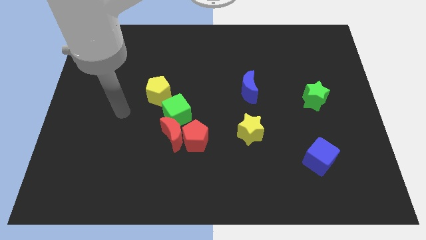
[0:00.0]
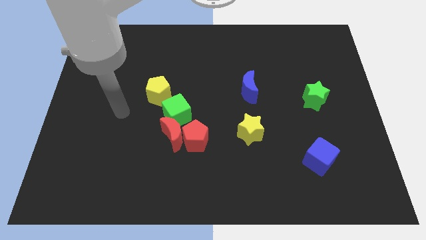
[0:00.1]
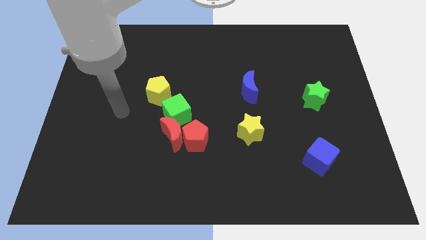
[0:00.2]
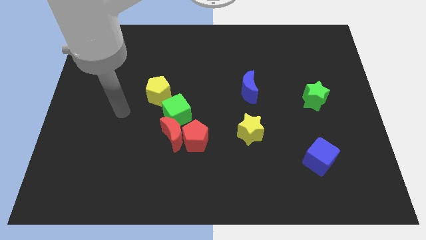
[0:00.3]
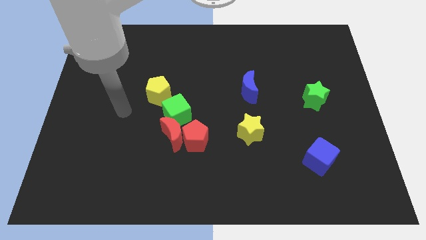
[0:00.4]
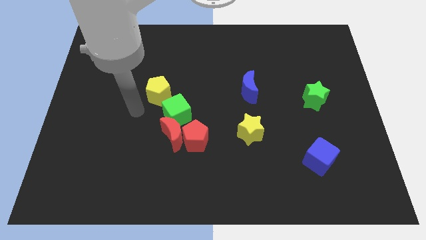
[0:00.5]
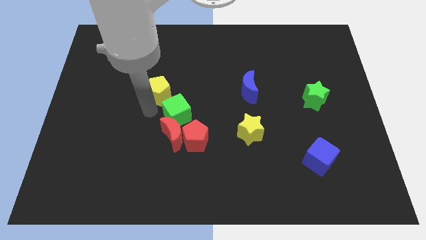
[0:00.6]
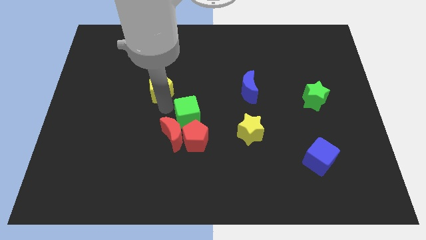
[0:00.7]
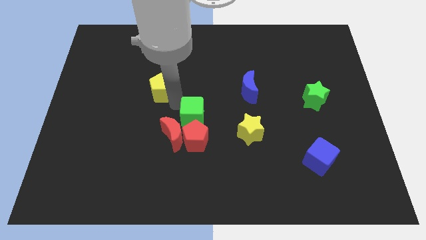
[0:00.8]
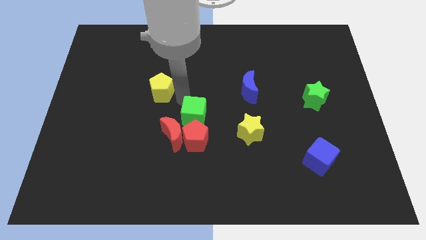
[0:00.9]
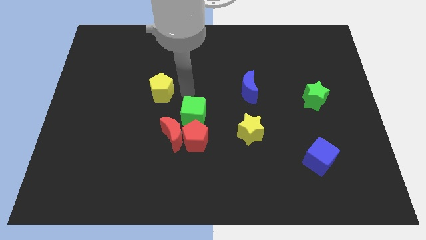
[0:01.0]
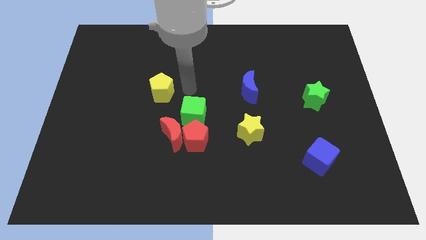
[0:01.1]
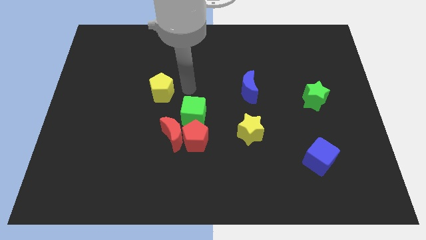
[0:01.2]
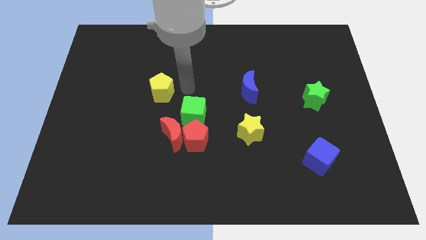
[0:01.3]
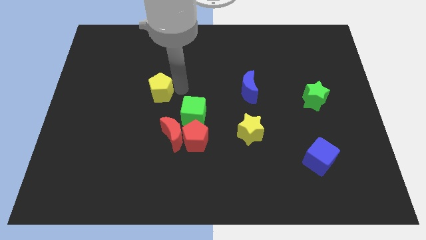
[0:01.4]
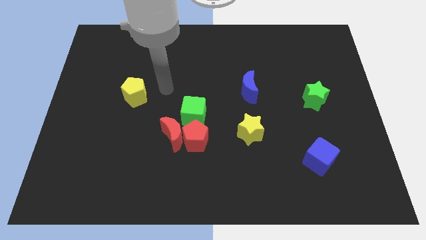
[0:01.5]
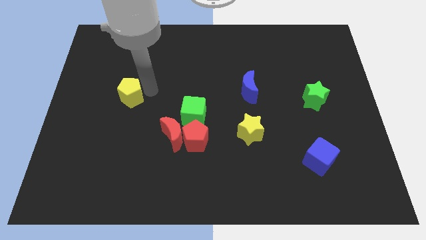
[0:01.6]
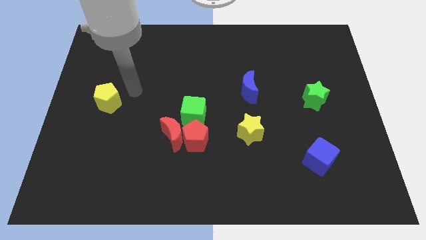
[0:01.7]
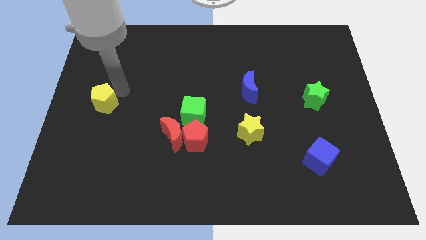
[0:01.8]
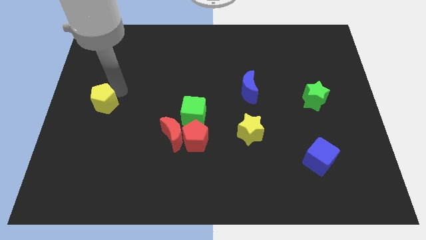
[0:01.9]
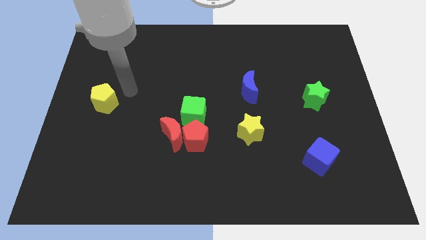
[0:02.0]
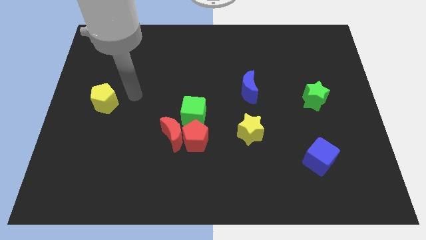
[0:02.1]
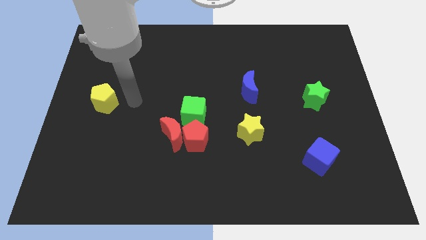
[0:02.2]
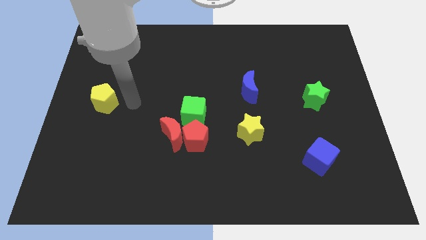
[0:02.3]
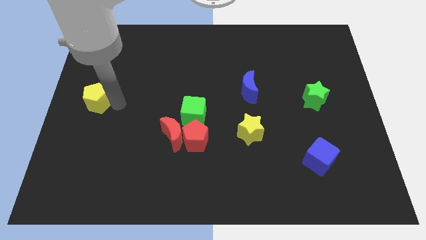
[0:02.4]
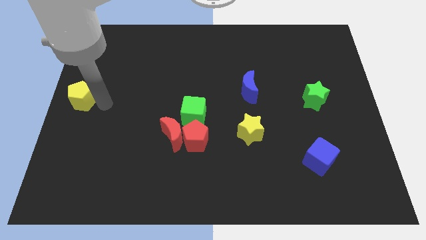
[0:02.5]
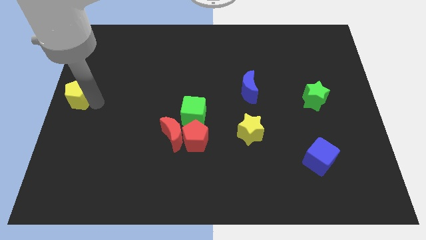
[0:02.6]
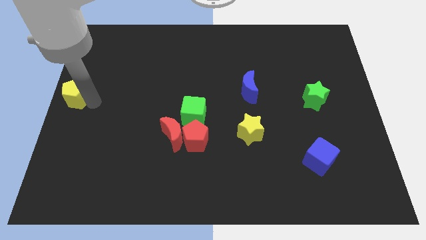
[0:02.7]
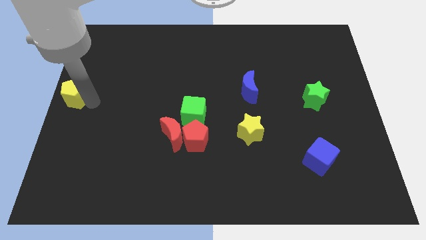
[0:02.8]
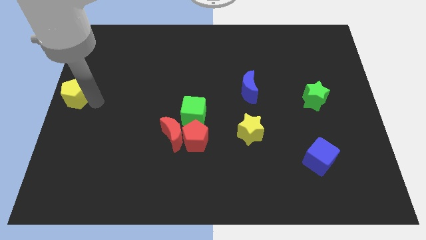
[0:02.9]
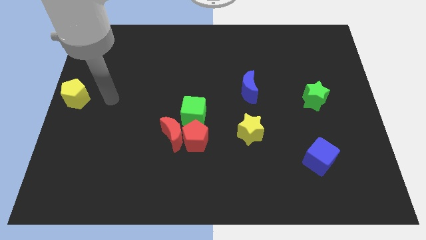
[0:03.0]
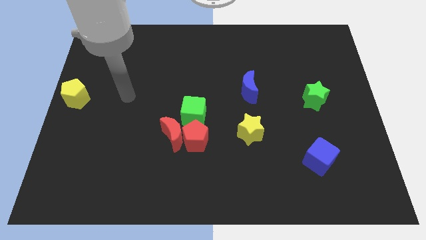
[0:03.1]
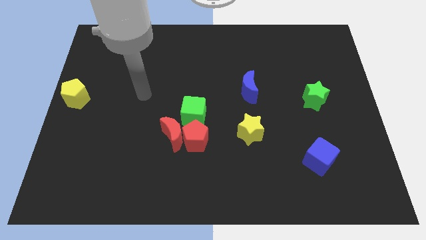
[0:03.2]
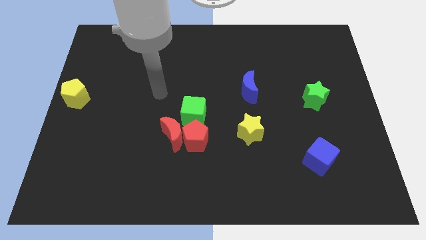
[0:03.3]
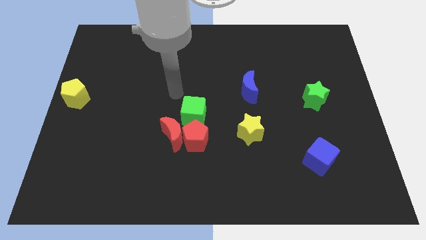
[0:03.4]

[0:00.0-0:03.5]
place yellow pentagon to the left center of the board

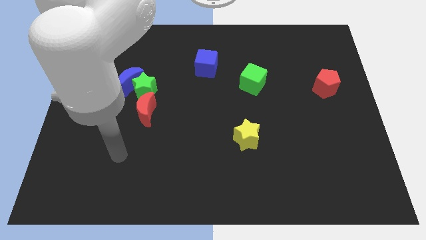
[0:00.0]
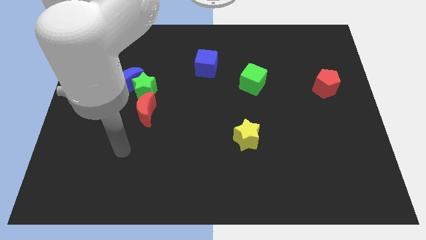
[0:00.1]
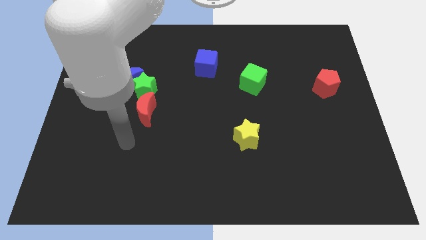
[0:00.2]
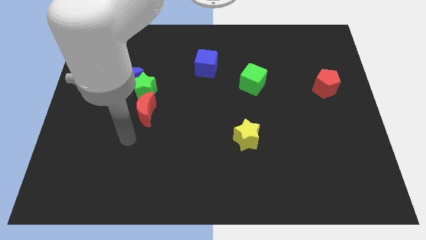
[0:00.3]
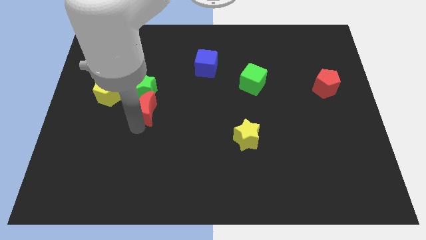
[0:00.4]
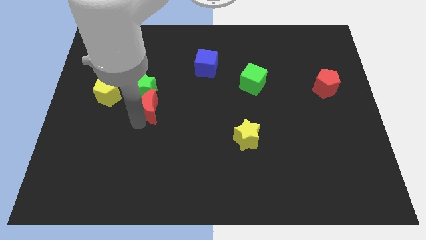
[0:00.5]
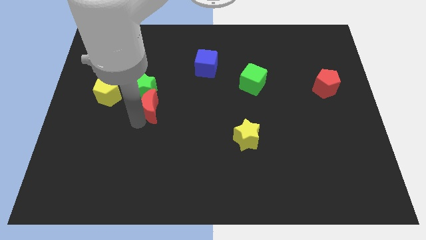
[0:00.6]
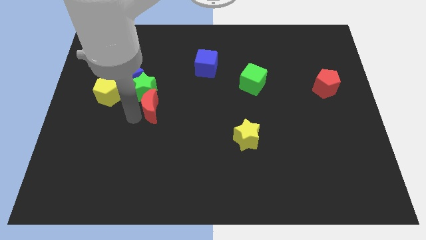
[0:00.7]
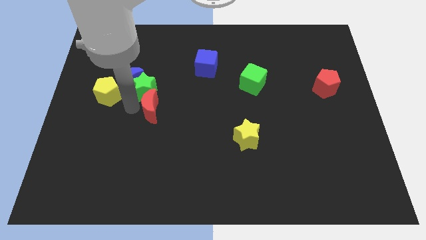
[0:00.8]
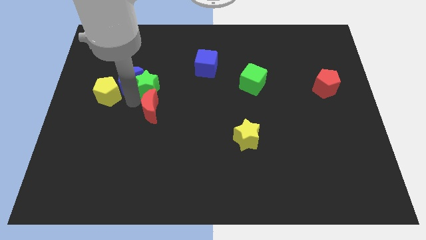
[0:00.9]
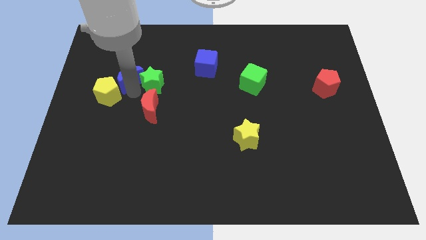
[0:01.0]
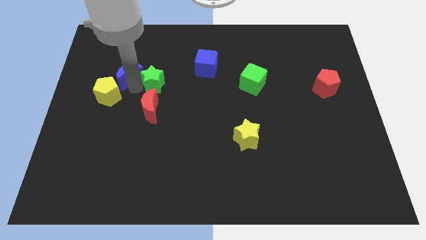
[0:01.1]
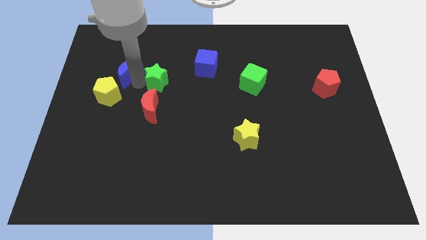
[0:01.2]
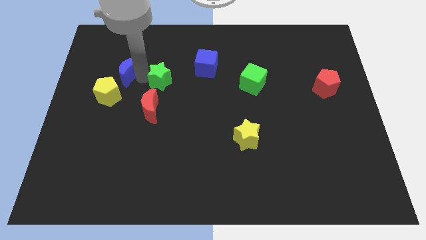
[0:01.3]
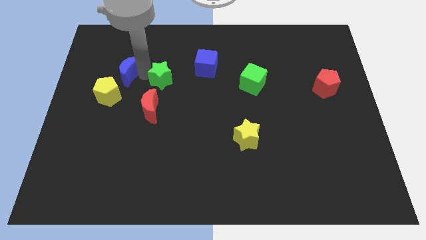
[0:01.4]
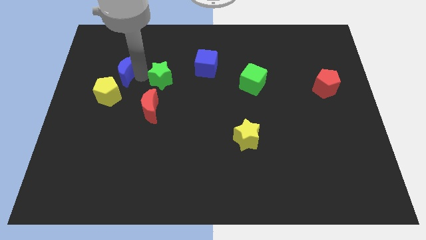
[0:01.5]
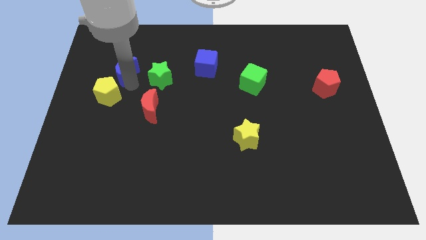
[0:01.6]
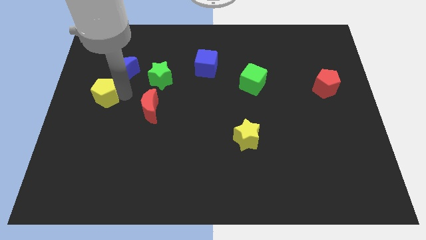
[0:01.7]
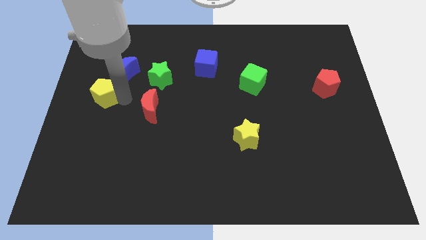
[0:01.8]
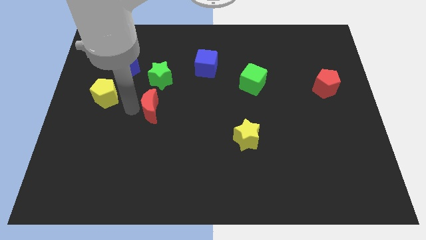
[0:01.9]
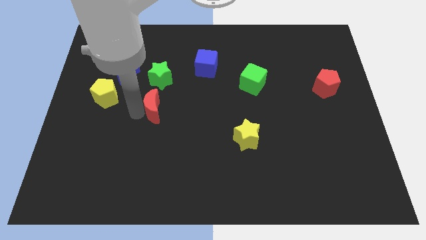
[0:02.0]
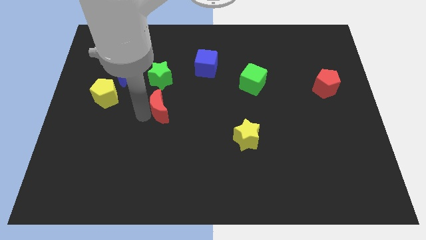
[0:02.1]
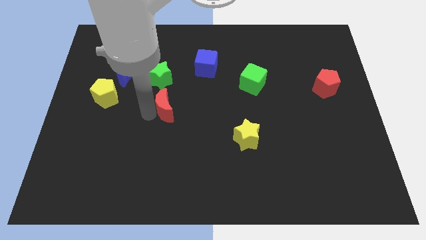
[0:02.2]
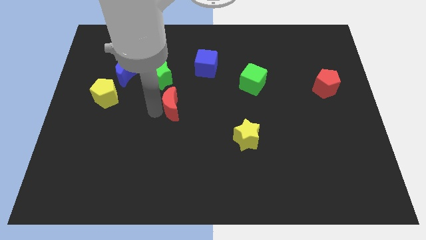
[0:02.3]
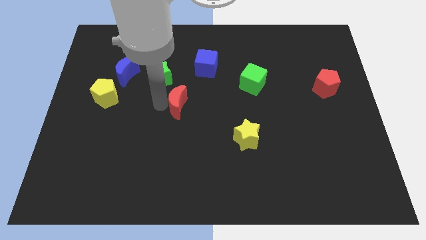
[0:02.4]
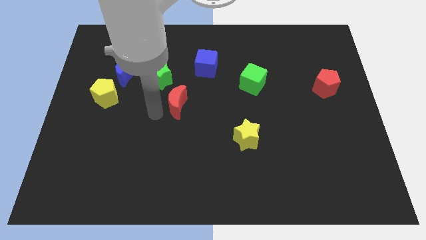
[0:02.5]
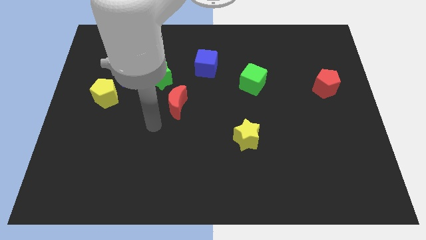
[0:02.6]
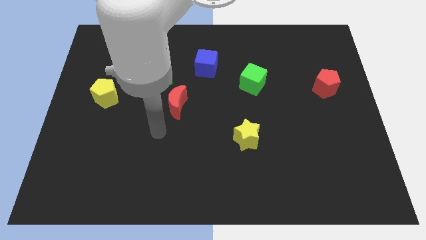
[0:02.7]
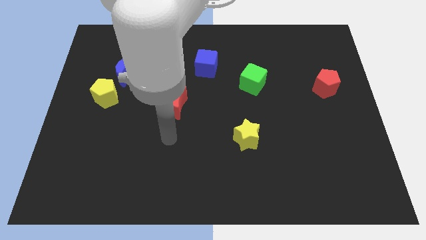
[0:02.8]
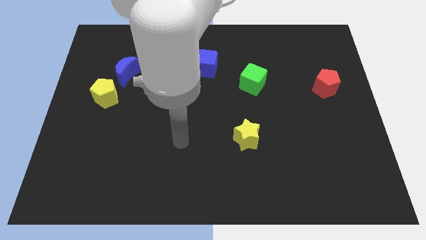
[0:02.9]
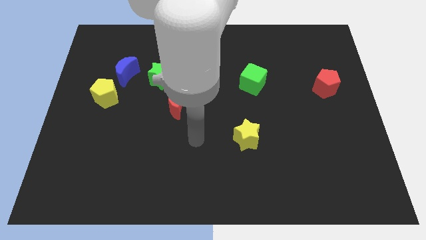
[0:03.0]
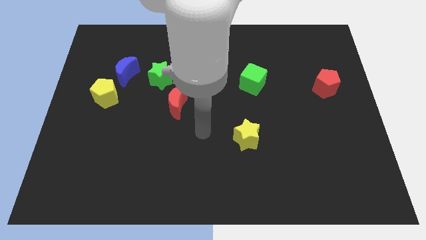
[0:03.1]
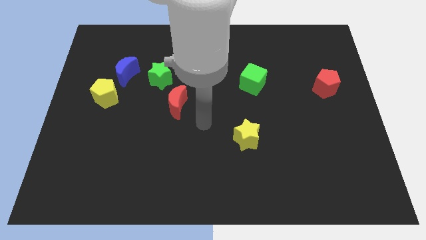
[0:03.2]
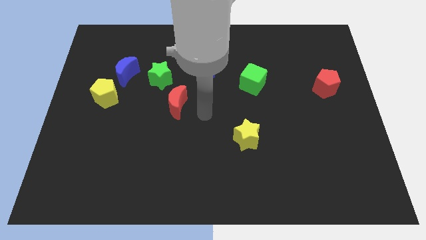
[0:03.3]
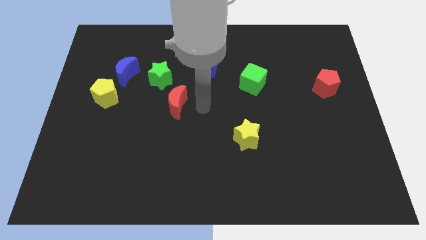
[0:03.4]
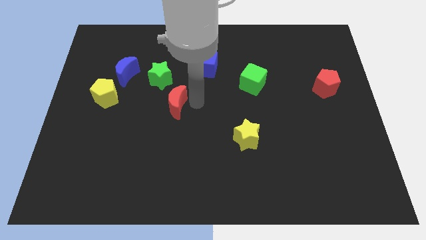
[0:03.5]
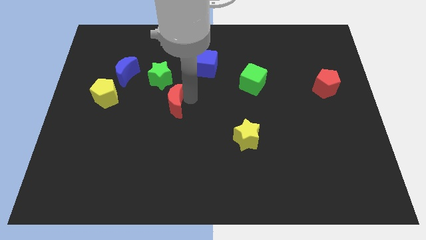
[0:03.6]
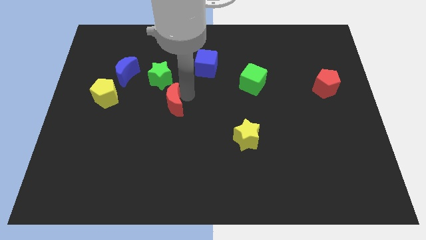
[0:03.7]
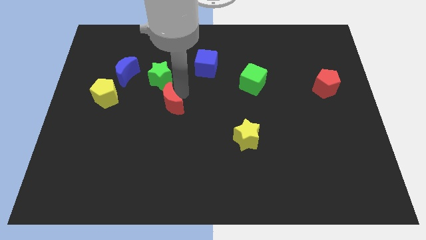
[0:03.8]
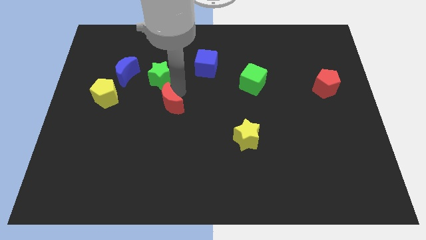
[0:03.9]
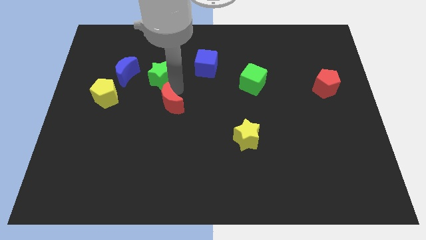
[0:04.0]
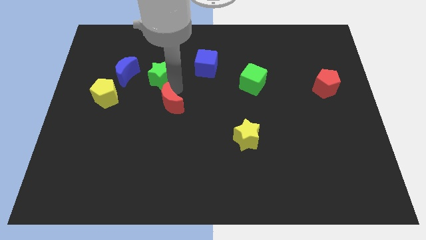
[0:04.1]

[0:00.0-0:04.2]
push the green star away from the blue crescent and red crescent

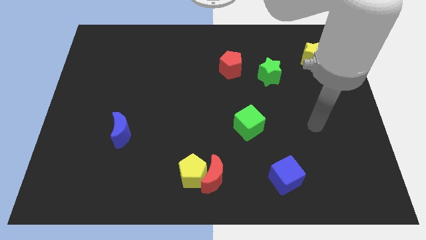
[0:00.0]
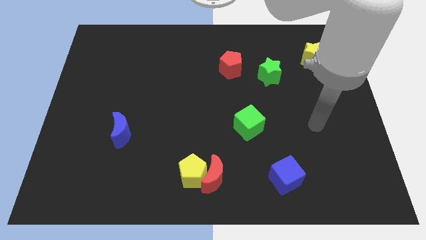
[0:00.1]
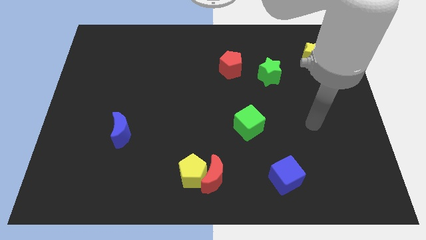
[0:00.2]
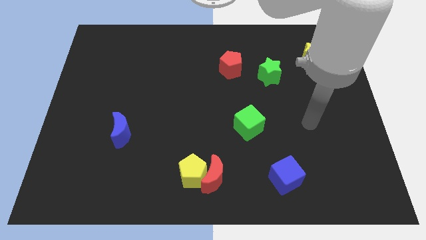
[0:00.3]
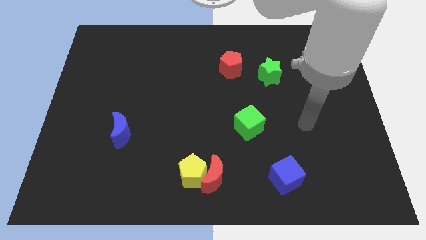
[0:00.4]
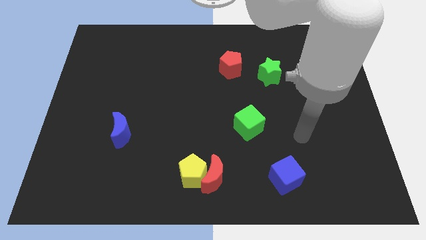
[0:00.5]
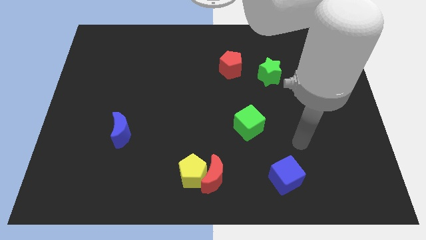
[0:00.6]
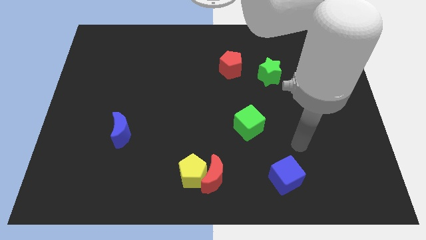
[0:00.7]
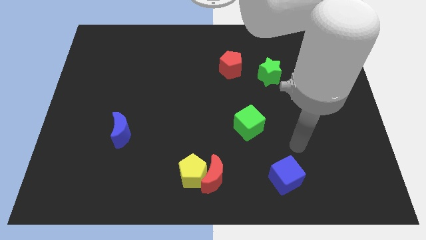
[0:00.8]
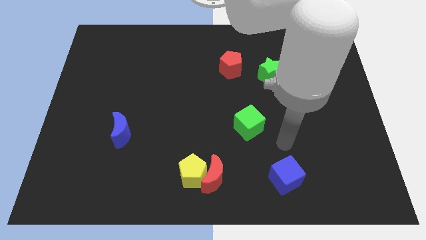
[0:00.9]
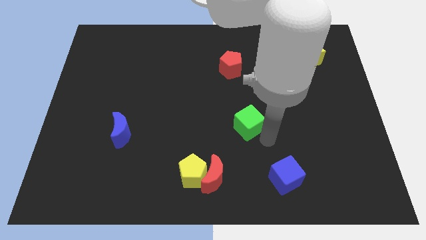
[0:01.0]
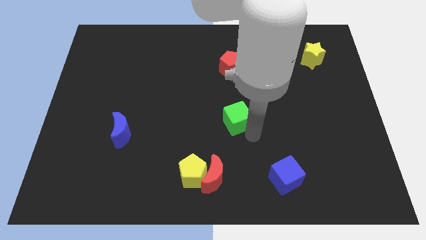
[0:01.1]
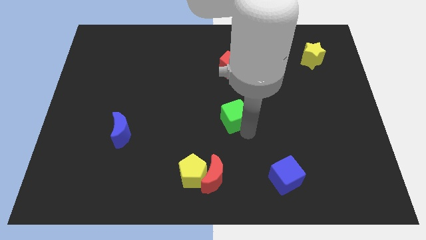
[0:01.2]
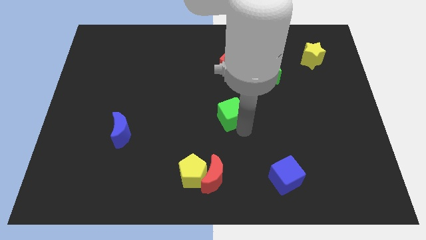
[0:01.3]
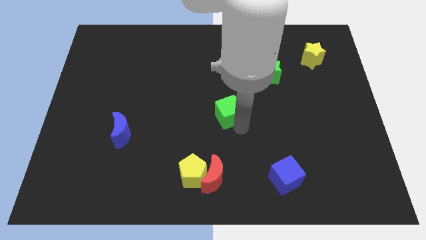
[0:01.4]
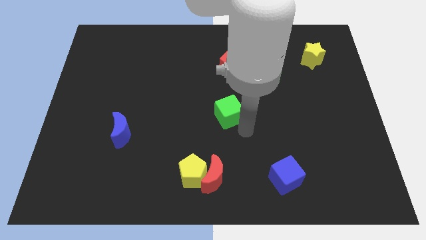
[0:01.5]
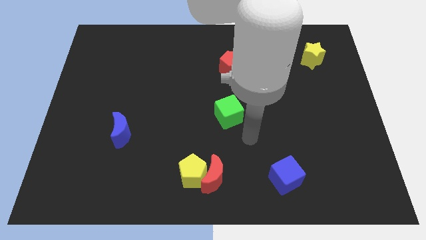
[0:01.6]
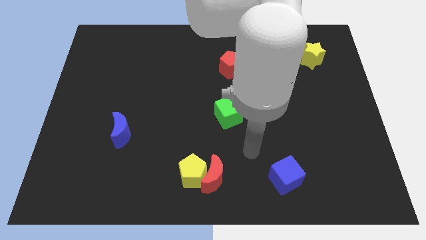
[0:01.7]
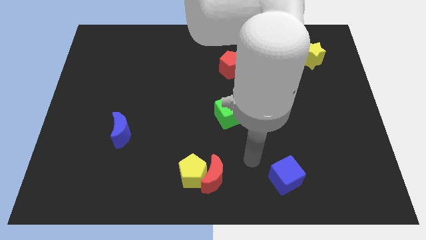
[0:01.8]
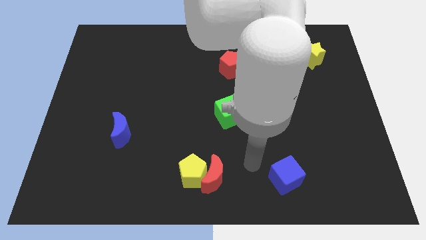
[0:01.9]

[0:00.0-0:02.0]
move the green cube slightly left
